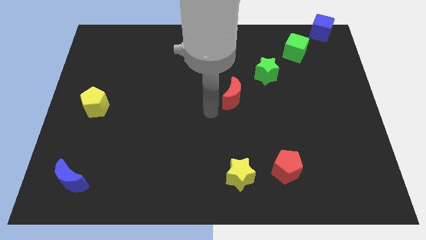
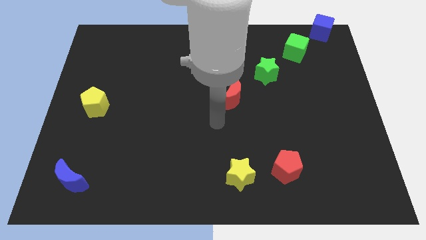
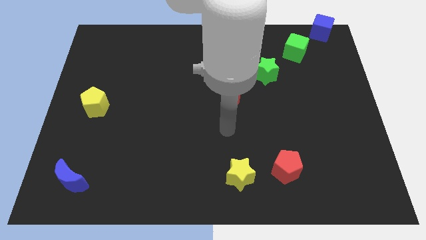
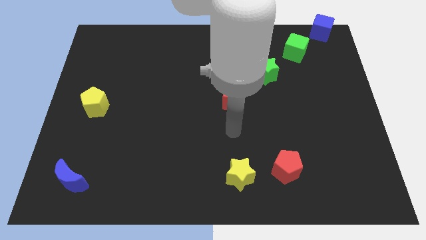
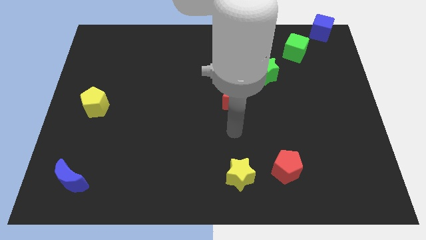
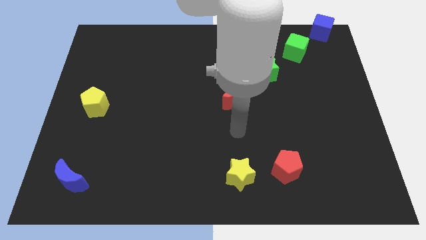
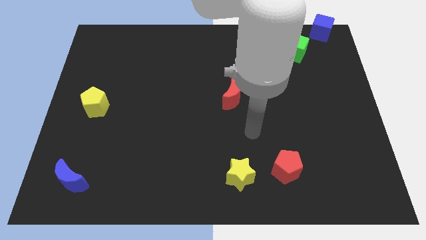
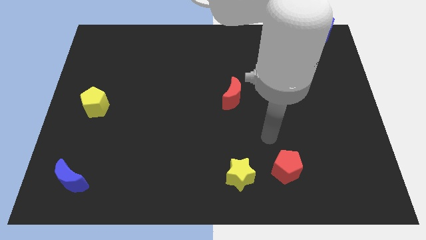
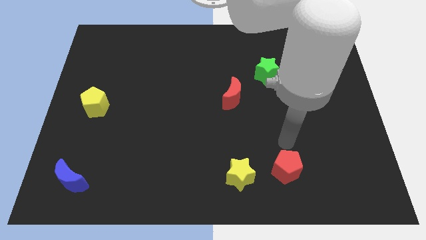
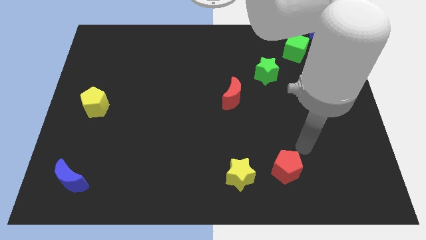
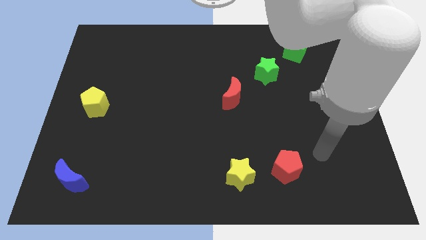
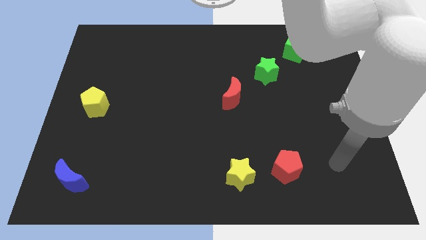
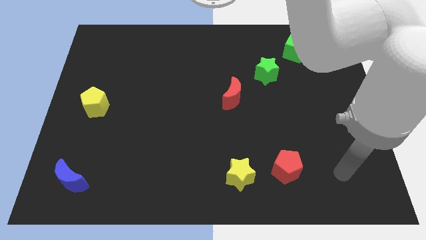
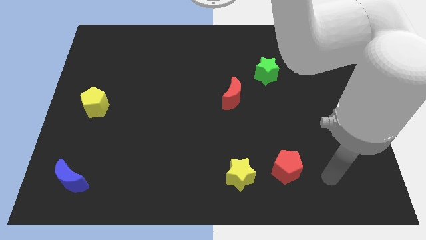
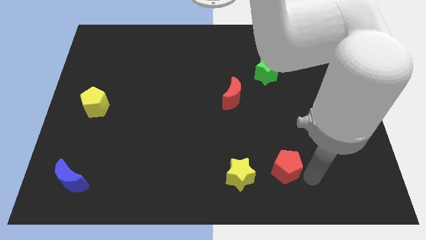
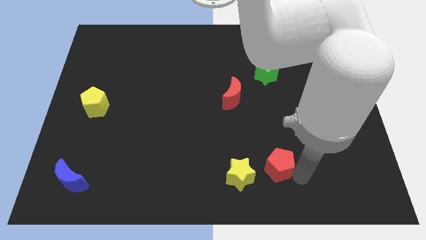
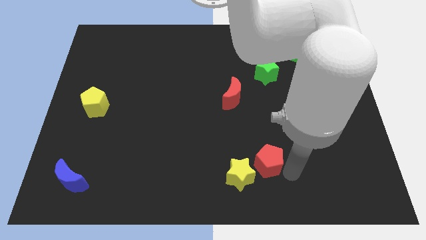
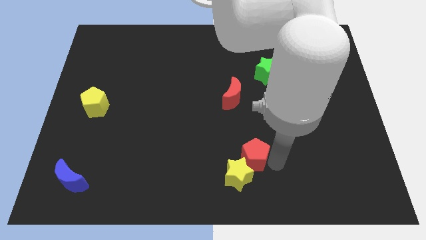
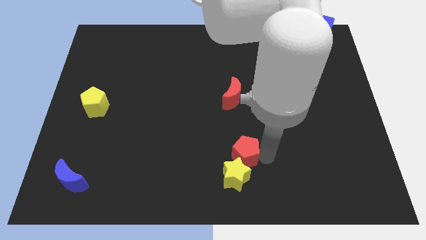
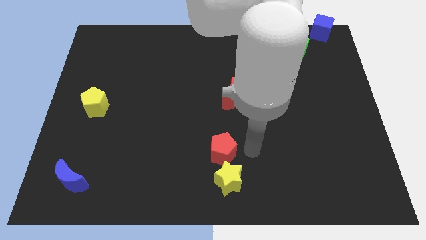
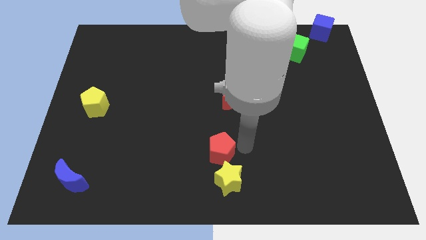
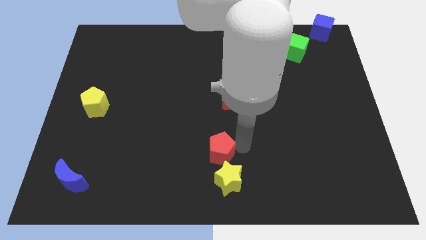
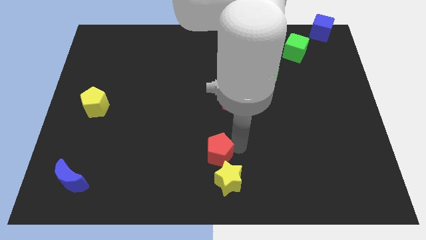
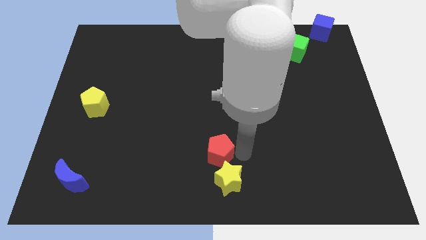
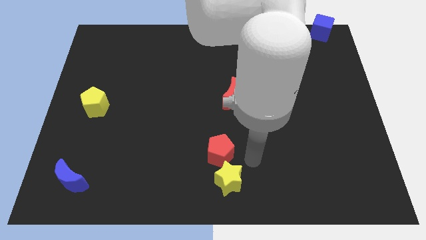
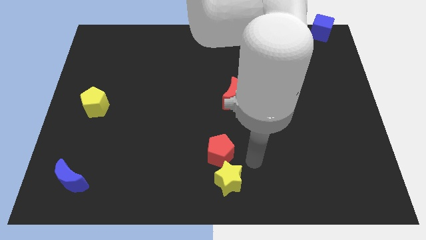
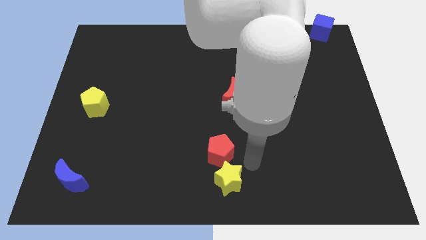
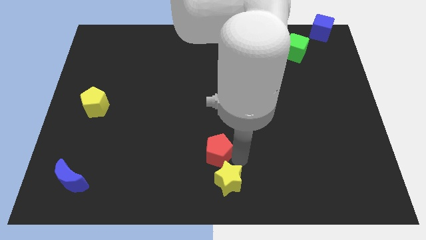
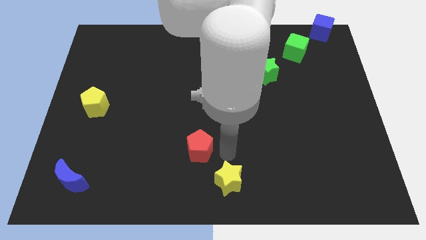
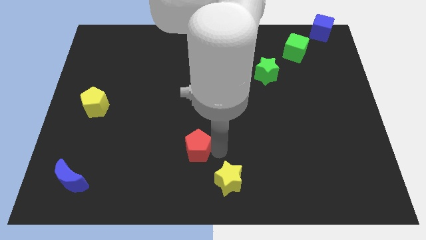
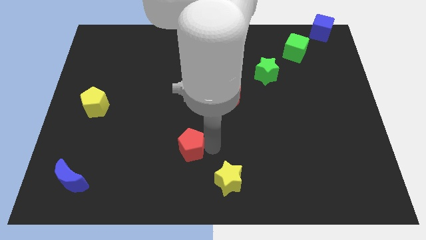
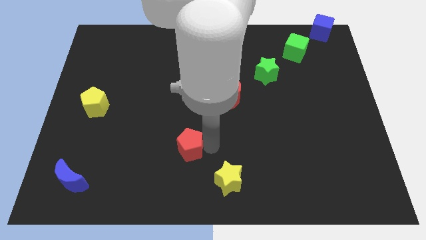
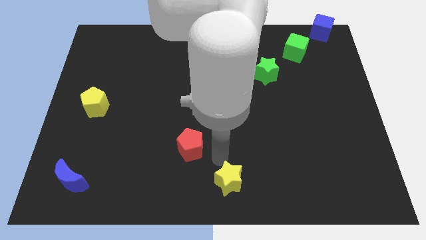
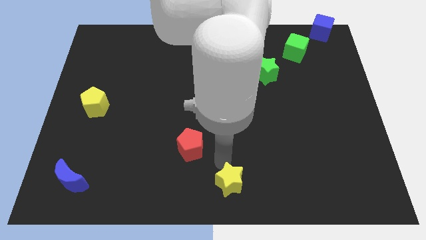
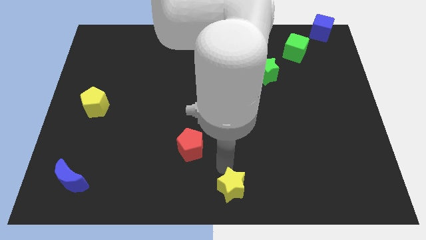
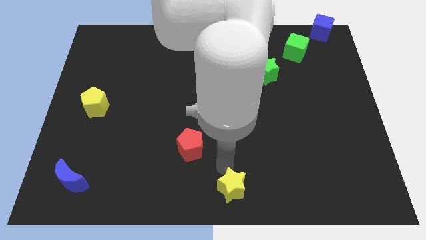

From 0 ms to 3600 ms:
move the red pentagon to the left side

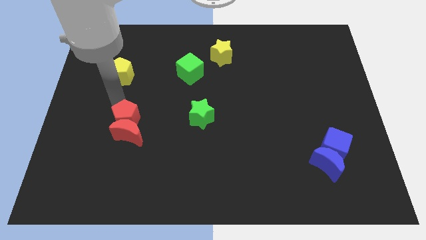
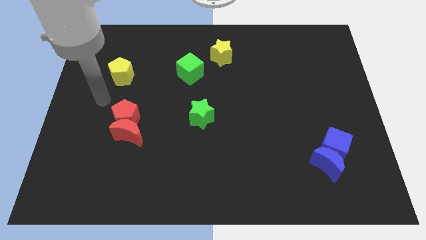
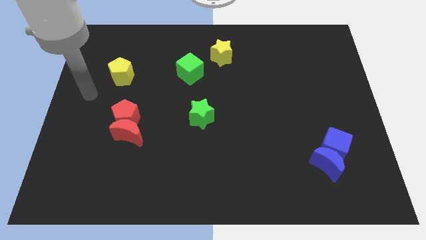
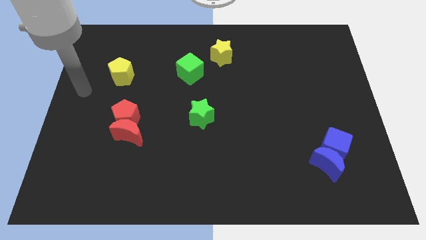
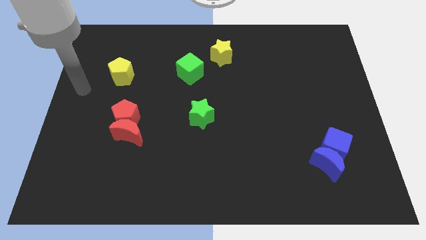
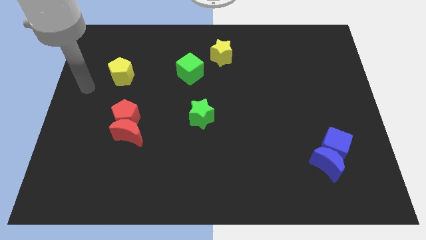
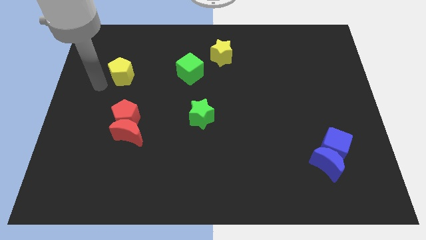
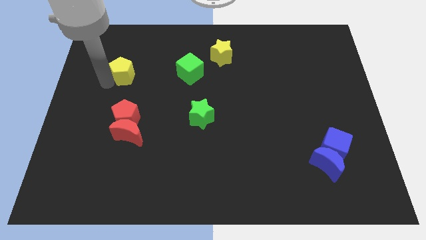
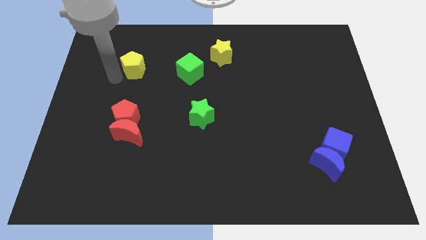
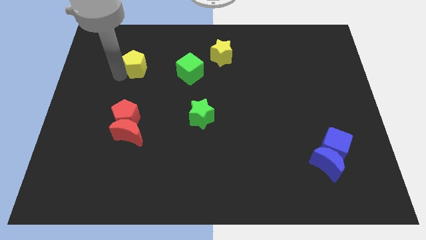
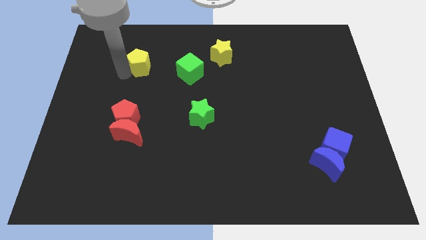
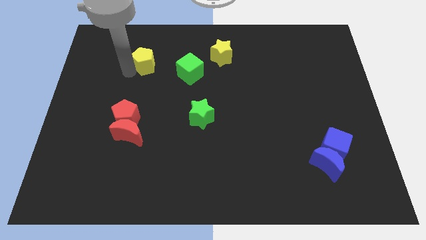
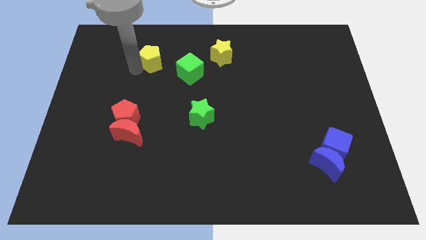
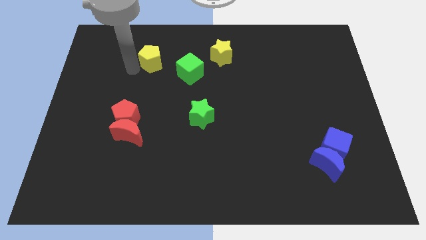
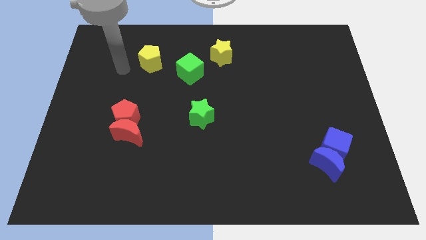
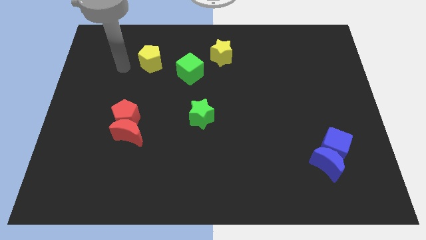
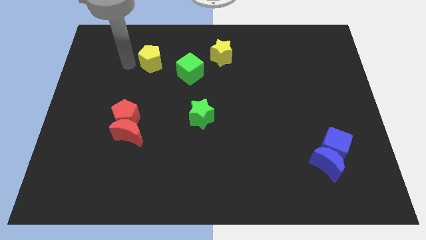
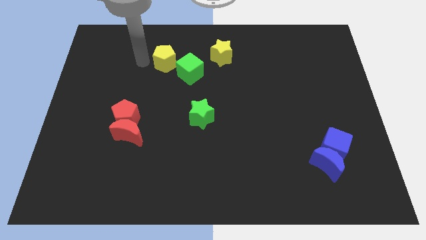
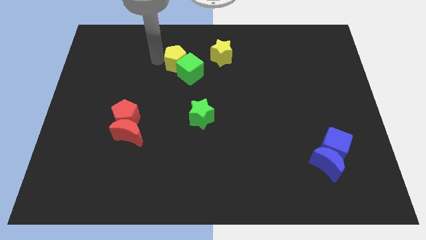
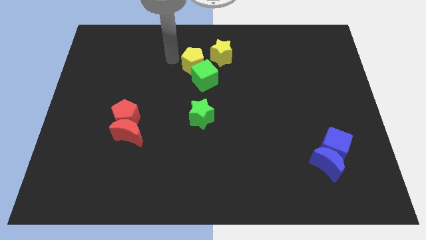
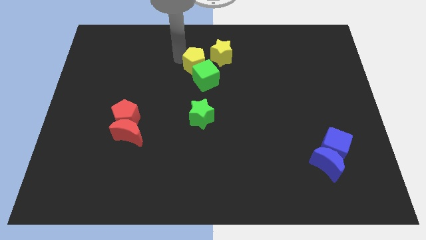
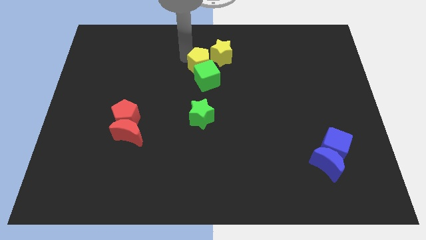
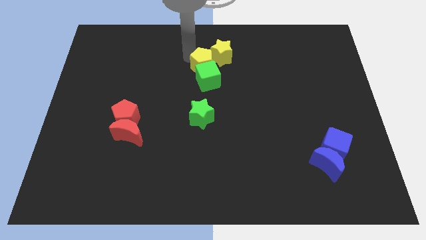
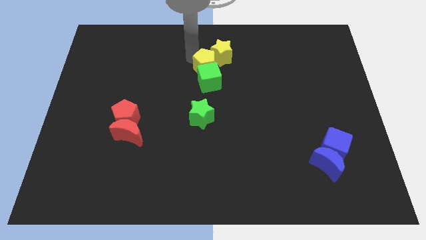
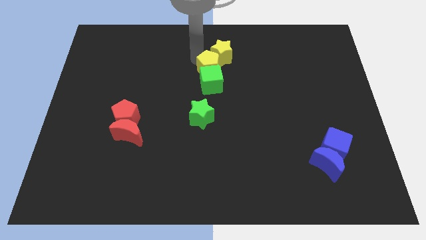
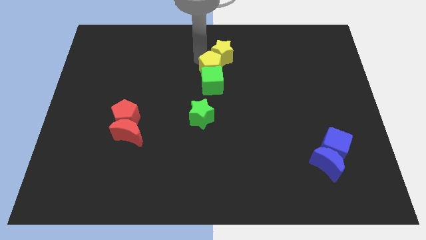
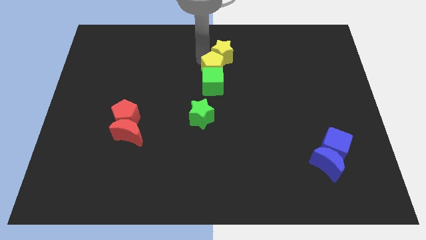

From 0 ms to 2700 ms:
place the yellow pentagon and green cube at the bottom of yellow star

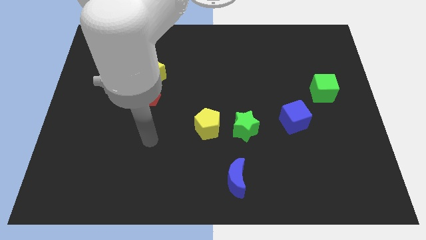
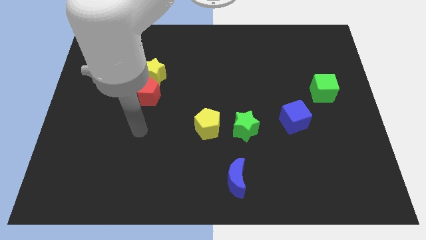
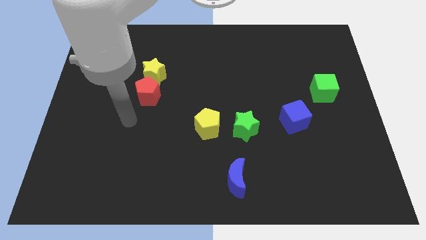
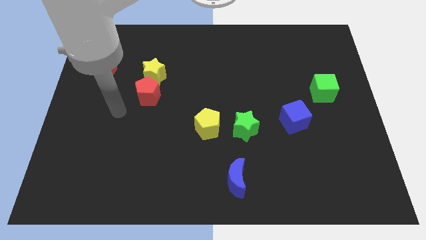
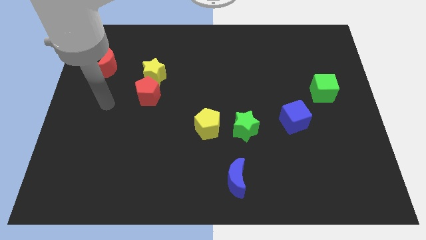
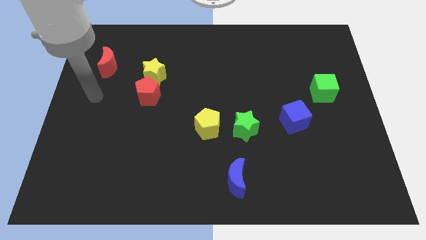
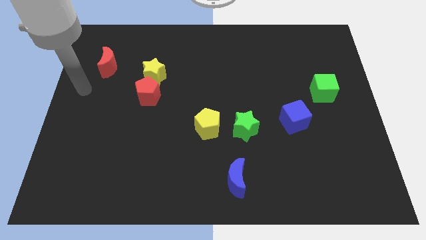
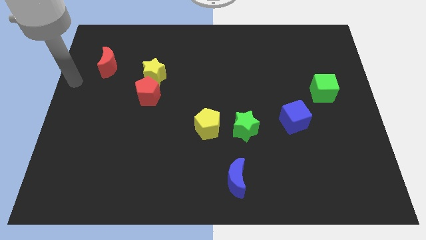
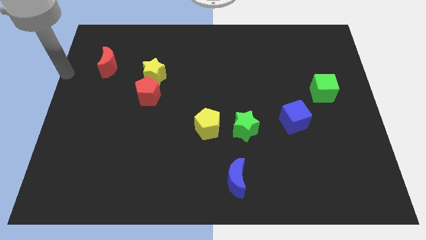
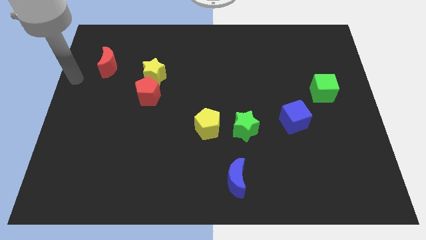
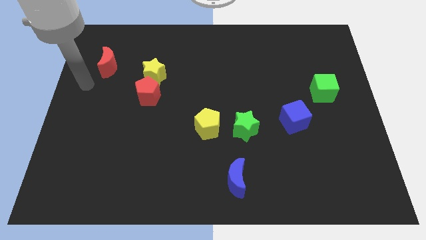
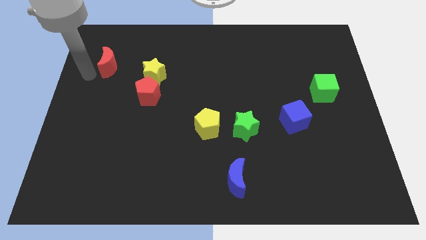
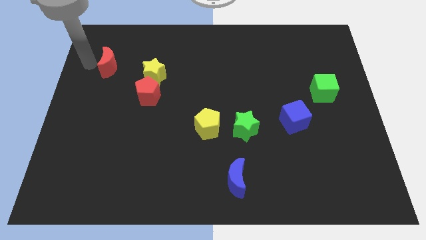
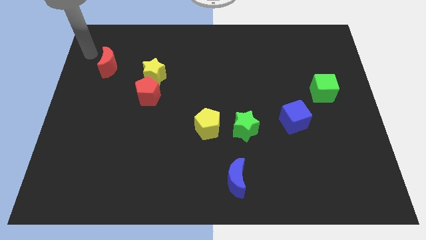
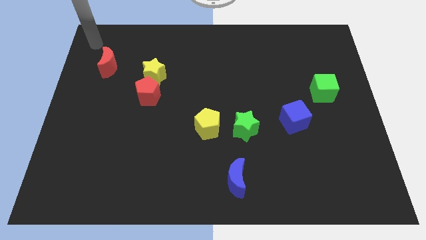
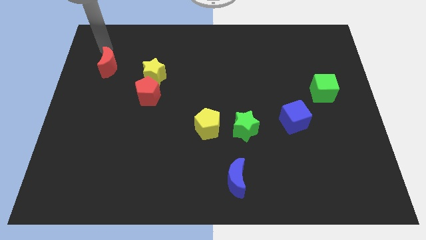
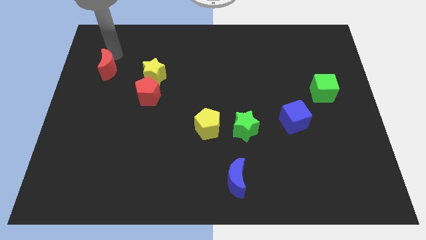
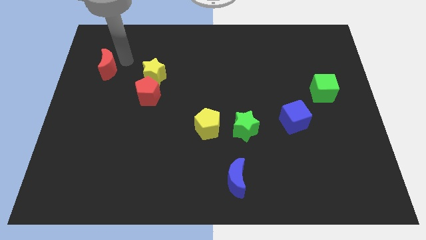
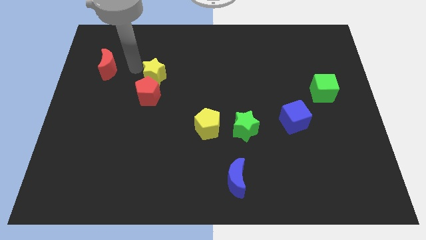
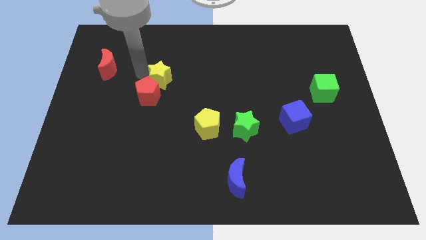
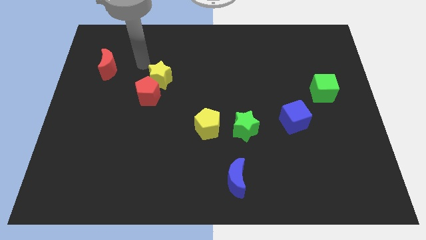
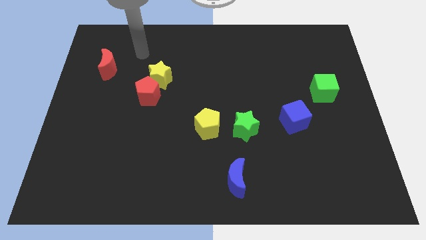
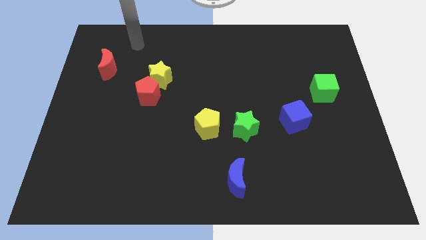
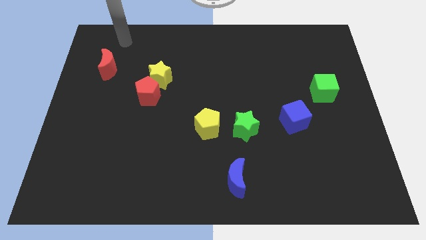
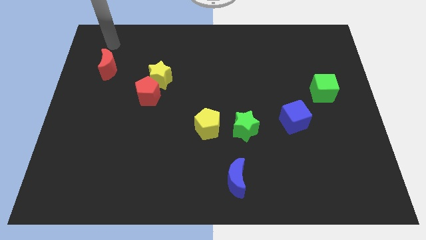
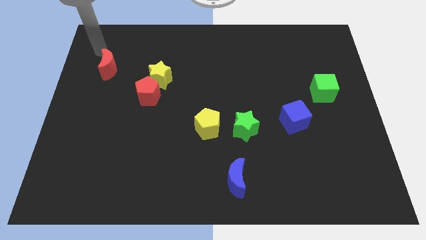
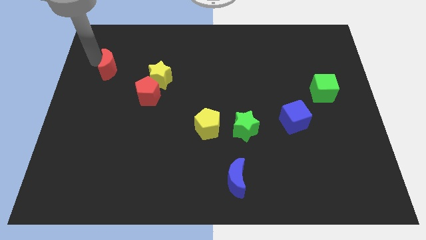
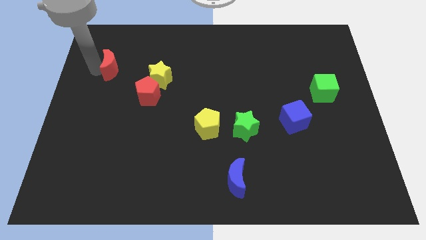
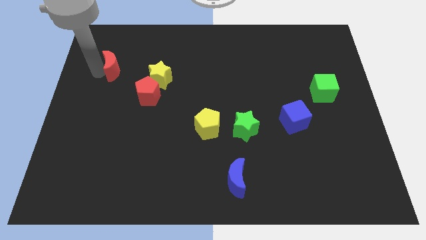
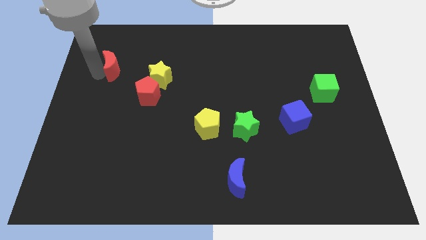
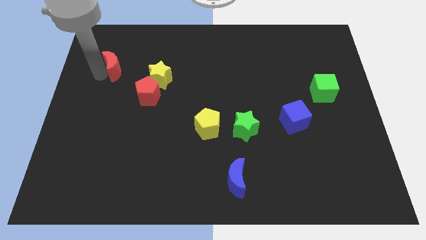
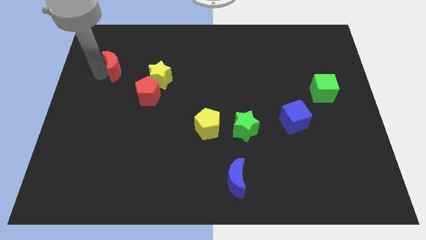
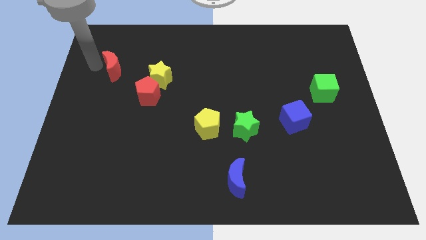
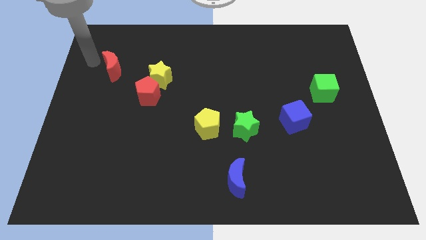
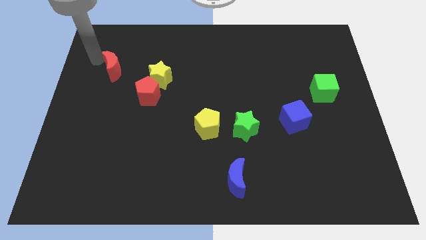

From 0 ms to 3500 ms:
move your arm close to the red moon
